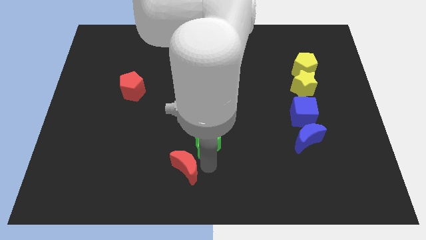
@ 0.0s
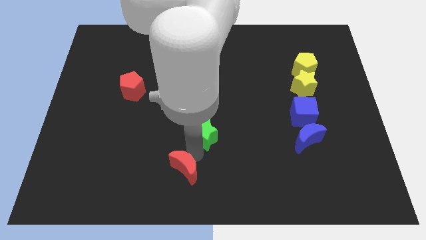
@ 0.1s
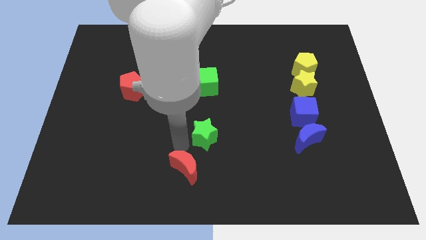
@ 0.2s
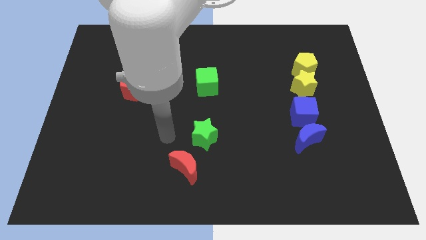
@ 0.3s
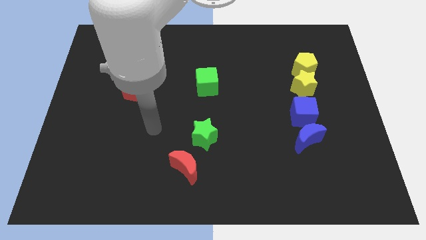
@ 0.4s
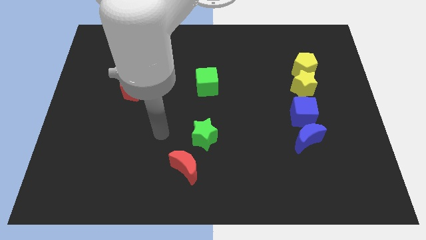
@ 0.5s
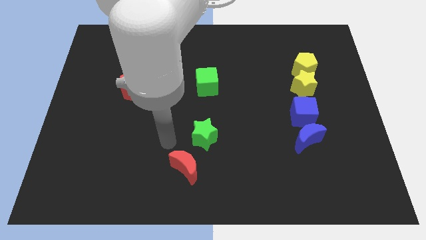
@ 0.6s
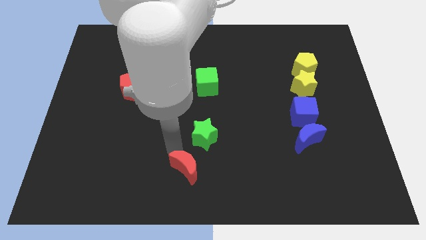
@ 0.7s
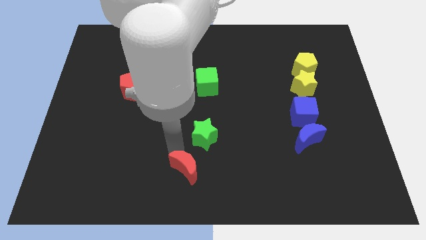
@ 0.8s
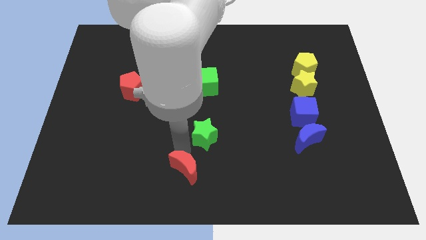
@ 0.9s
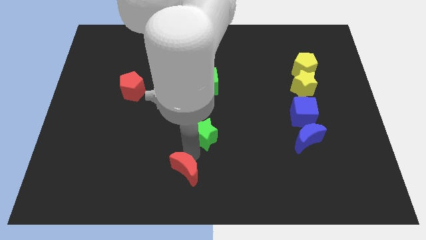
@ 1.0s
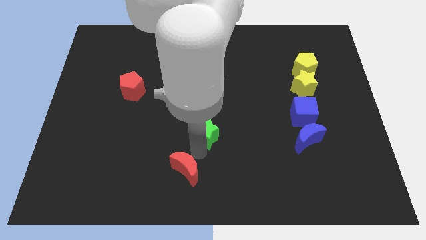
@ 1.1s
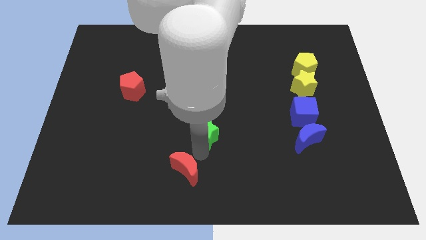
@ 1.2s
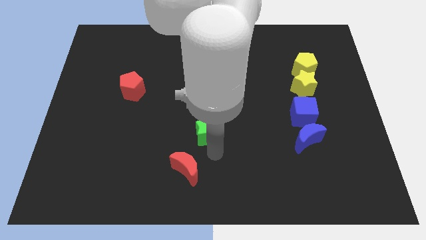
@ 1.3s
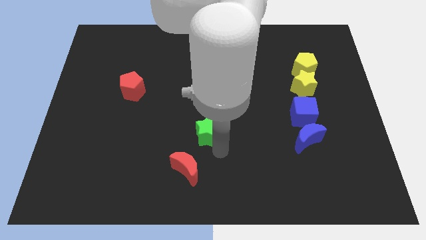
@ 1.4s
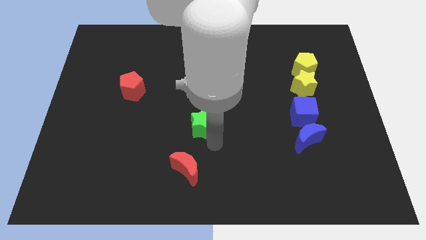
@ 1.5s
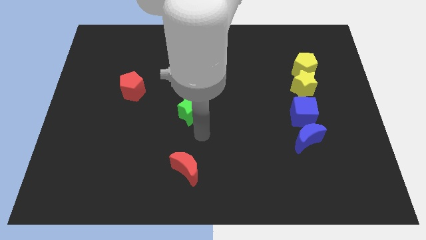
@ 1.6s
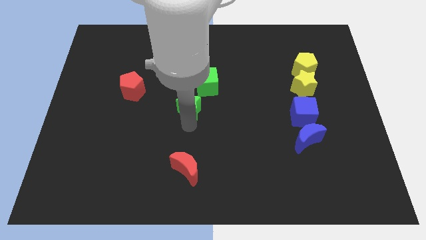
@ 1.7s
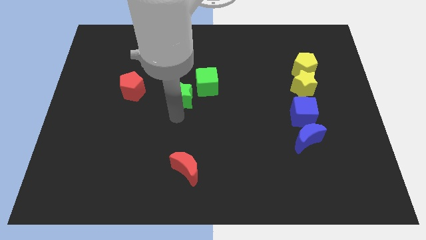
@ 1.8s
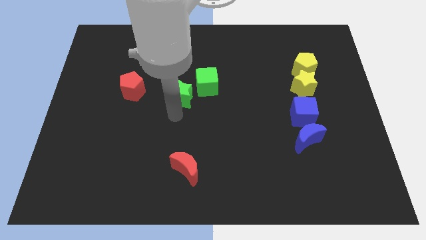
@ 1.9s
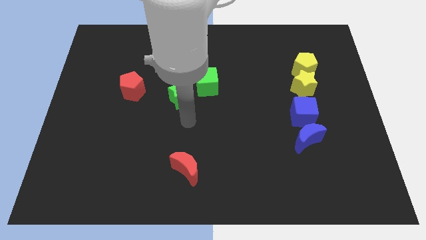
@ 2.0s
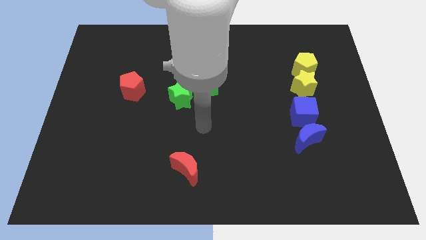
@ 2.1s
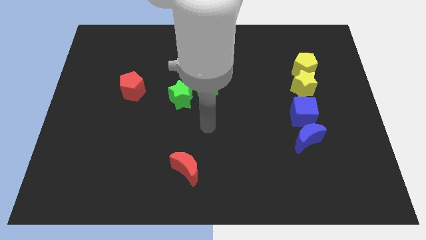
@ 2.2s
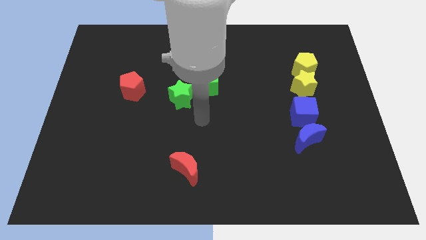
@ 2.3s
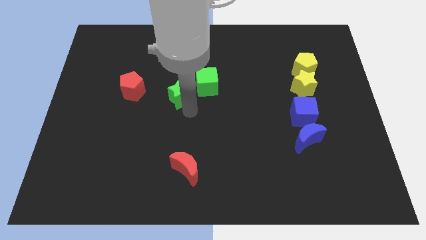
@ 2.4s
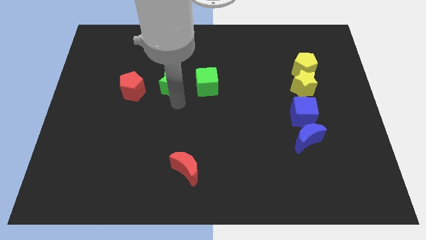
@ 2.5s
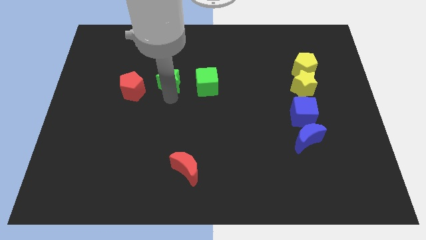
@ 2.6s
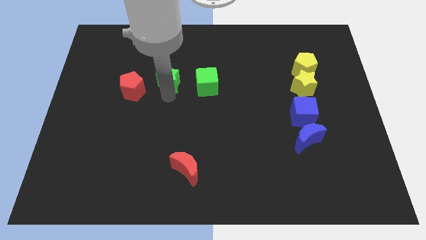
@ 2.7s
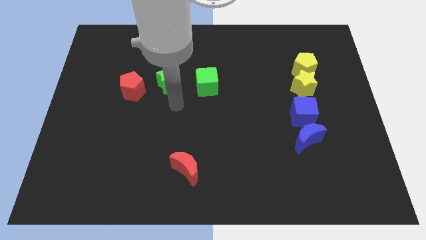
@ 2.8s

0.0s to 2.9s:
place the green star in between the green cube and red pentagon

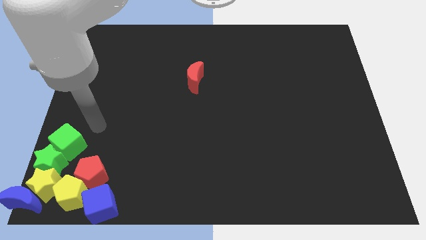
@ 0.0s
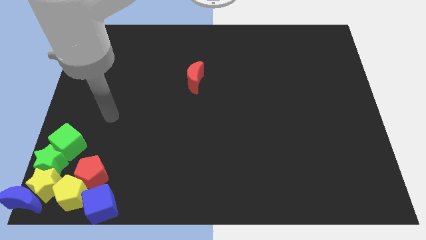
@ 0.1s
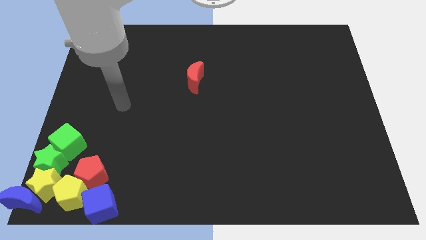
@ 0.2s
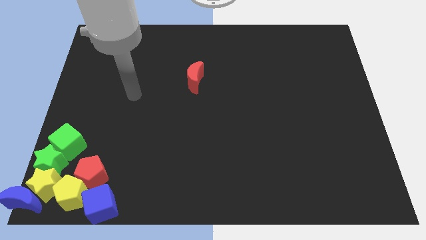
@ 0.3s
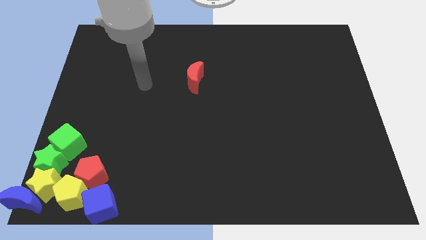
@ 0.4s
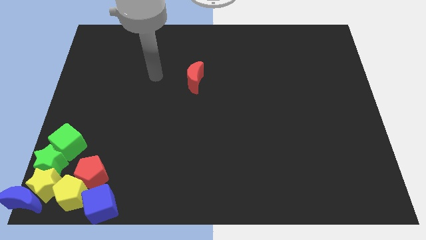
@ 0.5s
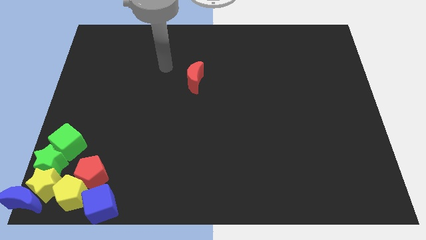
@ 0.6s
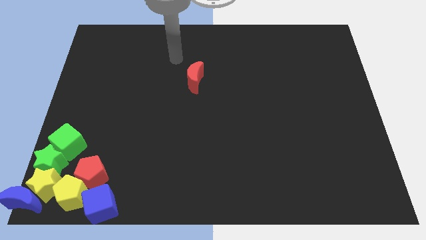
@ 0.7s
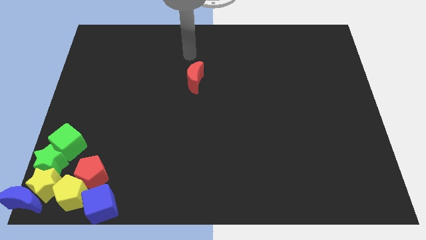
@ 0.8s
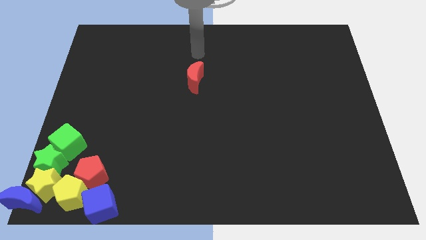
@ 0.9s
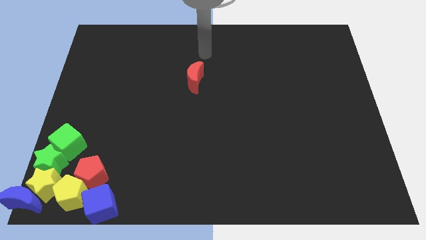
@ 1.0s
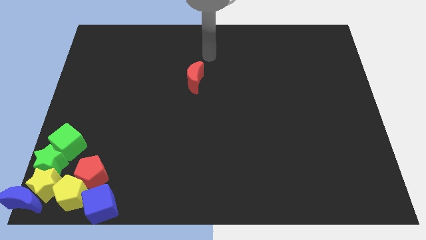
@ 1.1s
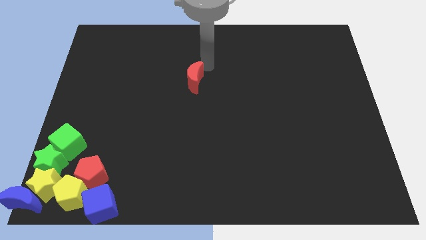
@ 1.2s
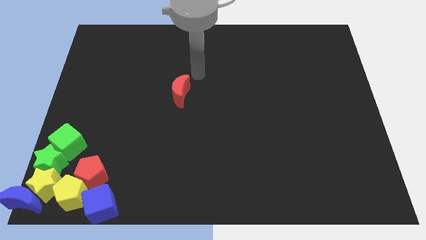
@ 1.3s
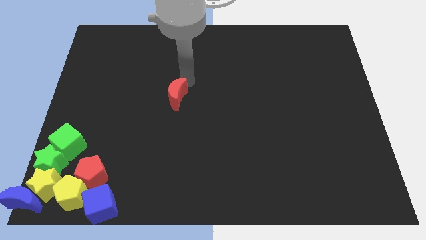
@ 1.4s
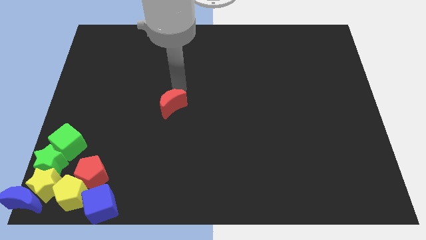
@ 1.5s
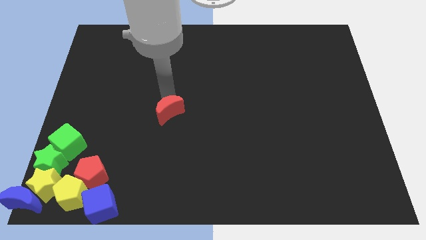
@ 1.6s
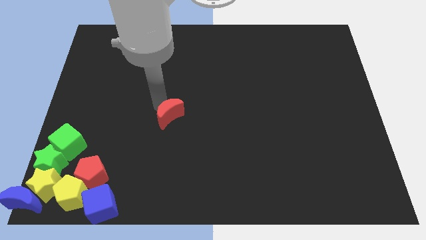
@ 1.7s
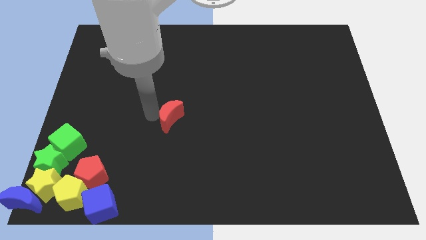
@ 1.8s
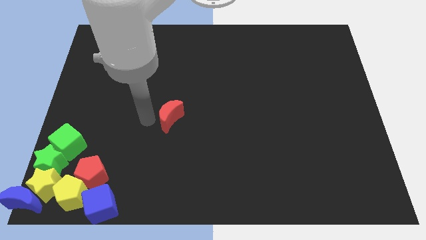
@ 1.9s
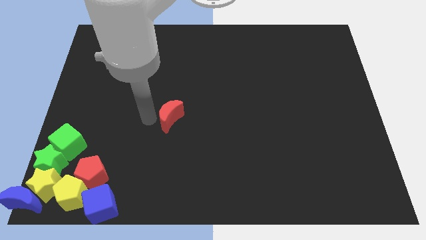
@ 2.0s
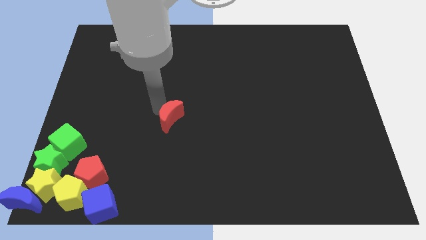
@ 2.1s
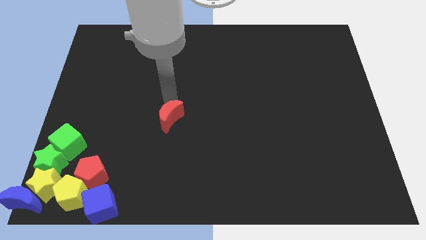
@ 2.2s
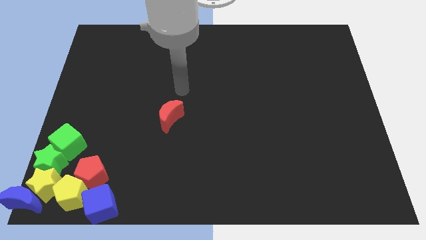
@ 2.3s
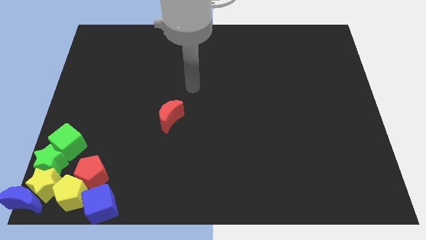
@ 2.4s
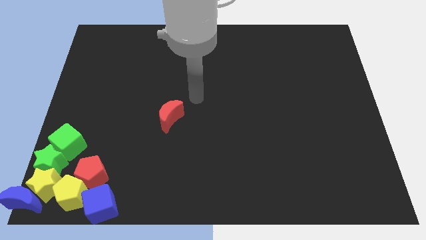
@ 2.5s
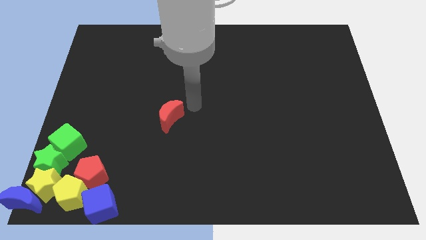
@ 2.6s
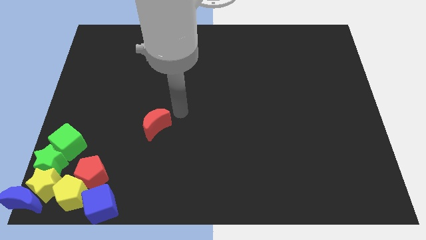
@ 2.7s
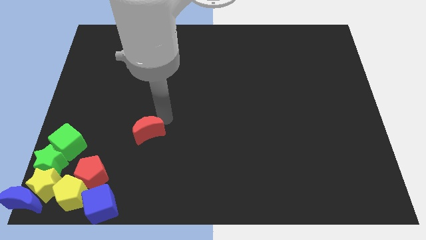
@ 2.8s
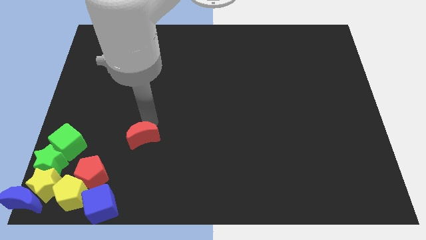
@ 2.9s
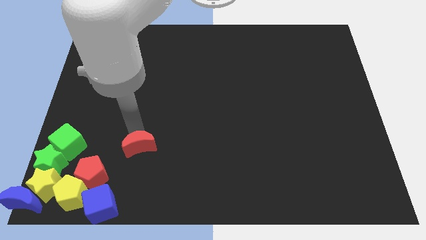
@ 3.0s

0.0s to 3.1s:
push the red crescent parallel to the top of red pentagon

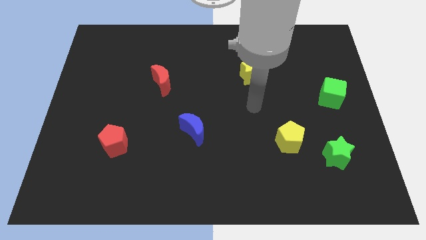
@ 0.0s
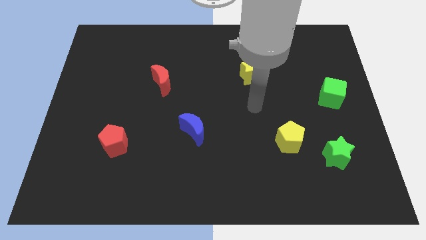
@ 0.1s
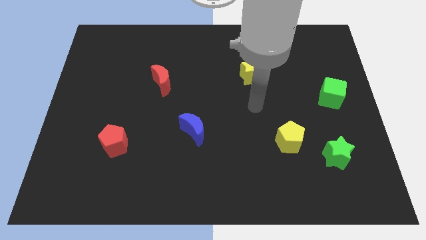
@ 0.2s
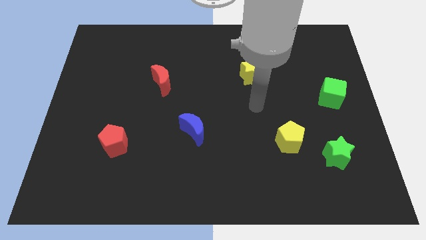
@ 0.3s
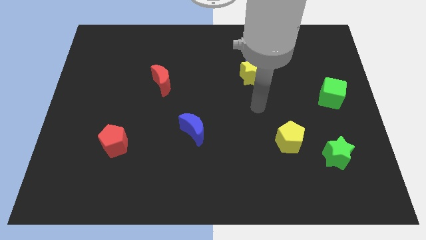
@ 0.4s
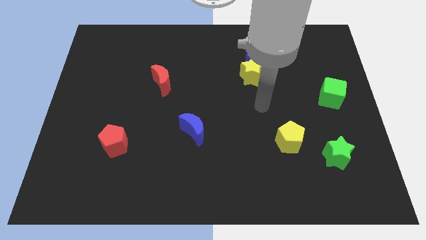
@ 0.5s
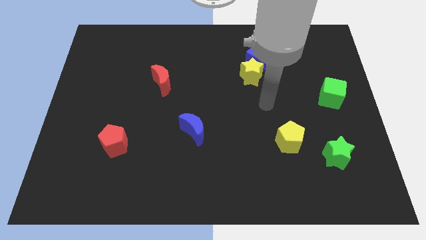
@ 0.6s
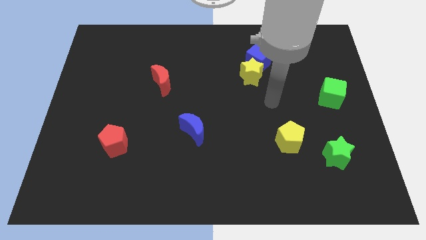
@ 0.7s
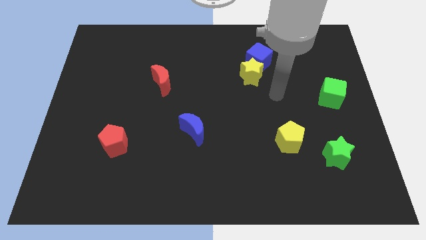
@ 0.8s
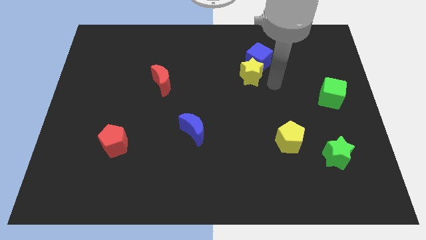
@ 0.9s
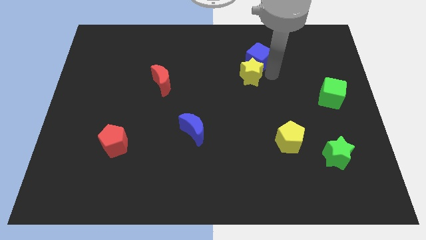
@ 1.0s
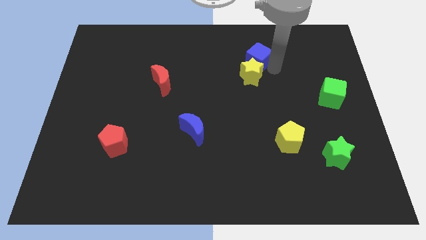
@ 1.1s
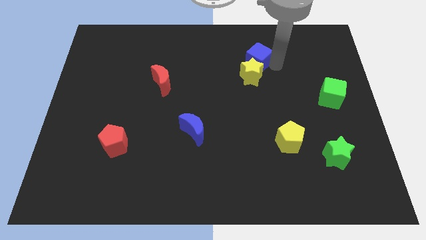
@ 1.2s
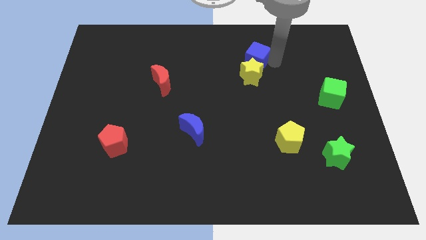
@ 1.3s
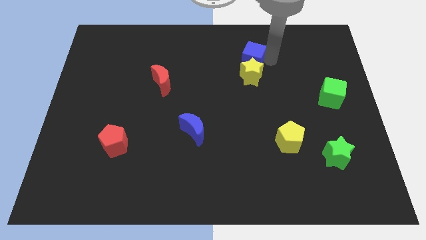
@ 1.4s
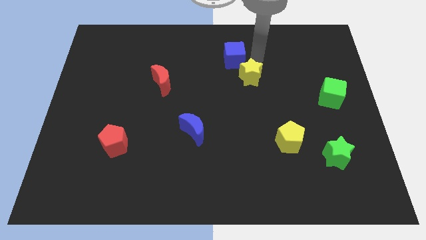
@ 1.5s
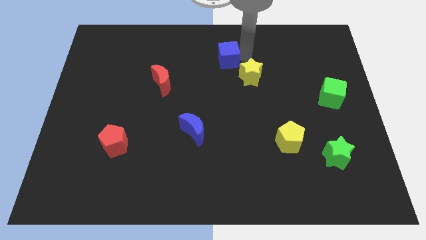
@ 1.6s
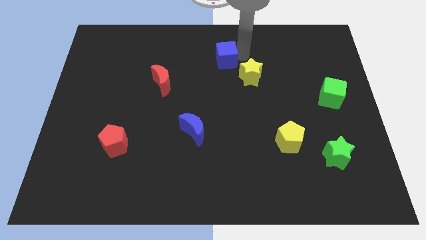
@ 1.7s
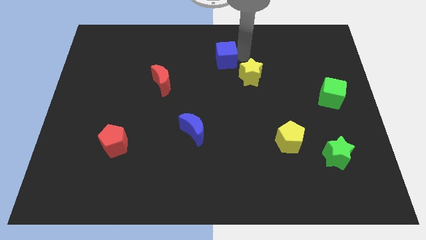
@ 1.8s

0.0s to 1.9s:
slightly move the blue cube to the left of the board

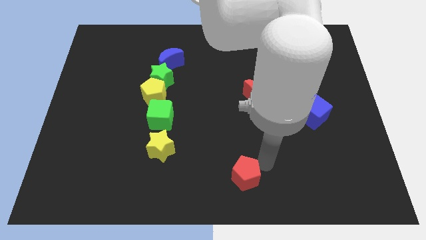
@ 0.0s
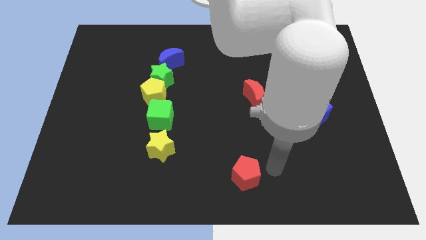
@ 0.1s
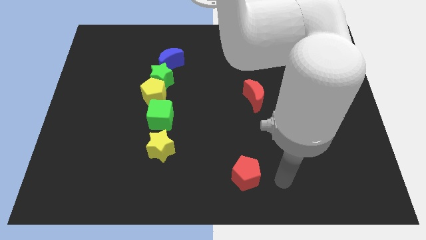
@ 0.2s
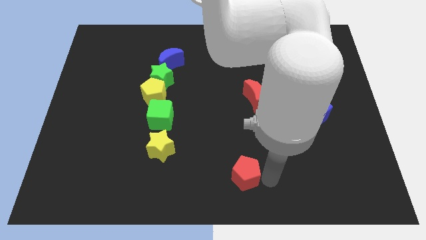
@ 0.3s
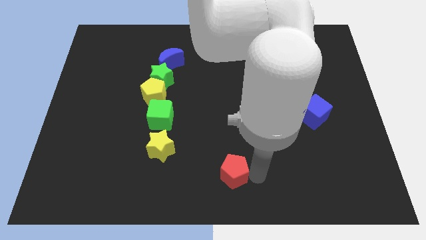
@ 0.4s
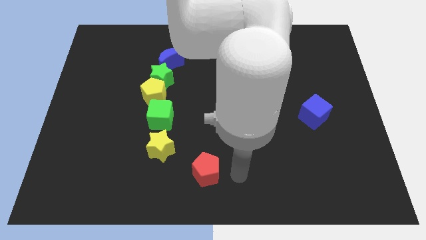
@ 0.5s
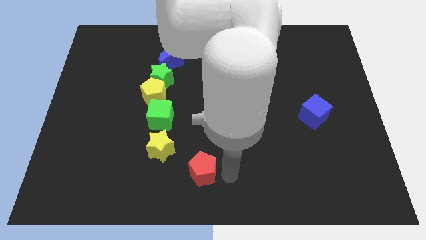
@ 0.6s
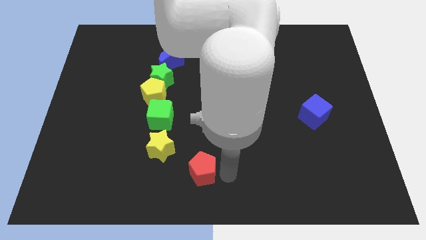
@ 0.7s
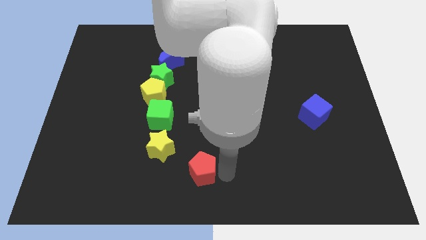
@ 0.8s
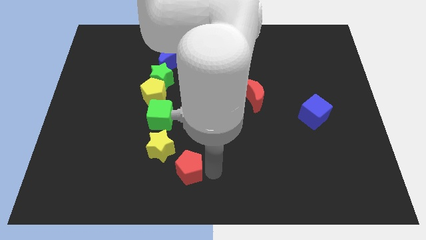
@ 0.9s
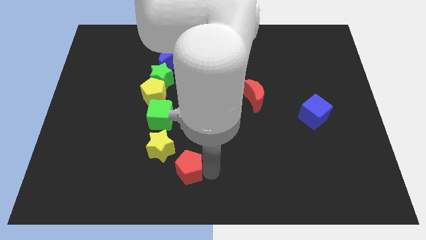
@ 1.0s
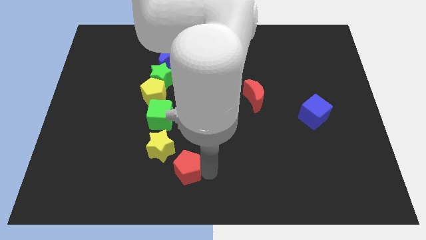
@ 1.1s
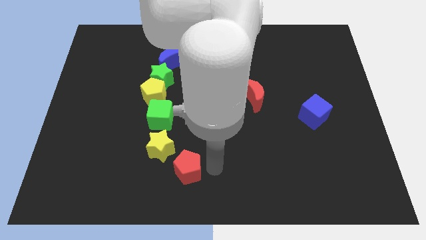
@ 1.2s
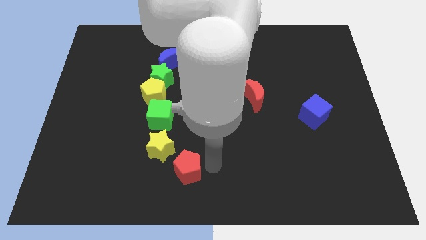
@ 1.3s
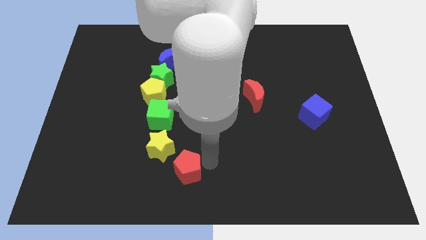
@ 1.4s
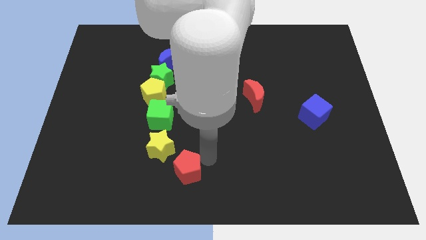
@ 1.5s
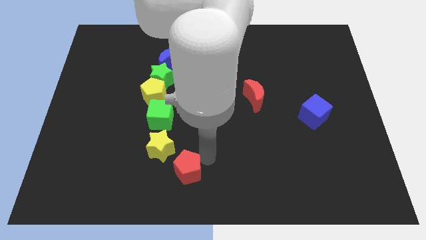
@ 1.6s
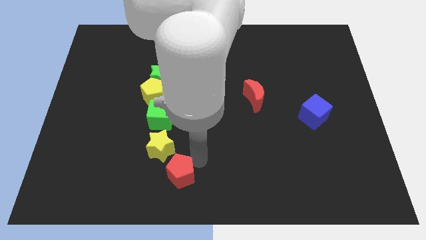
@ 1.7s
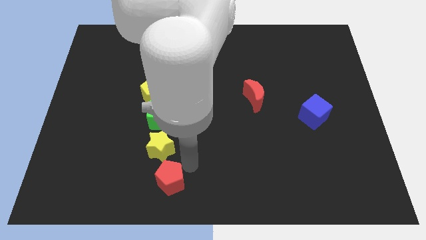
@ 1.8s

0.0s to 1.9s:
move the red pentagon below to the yellow star
